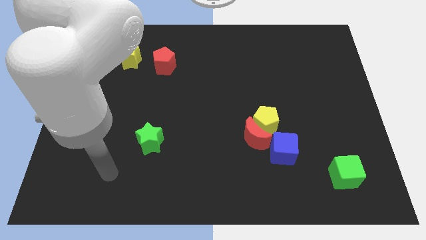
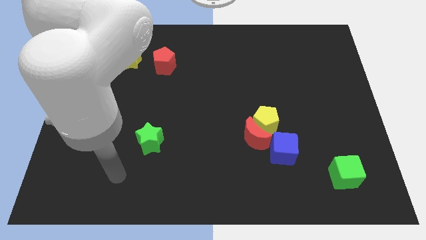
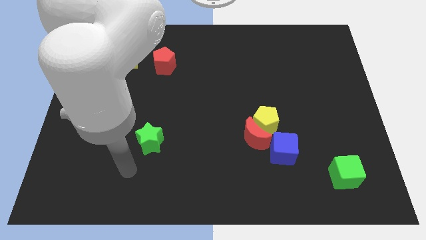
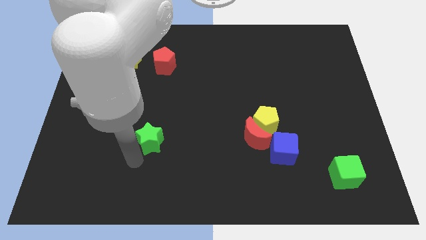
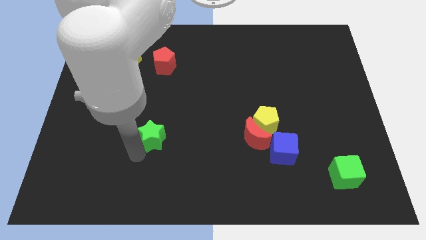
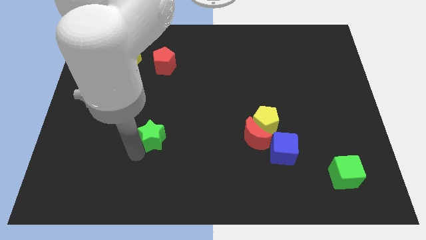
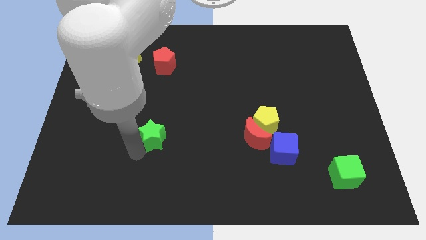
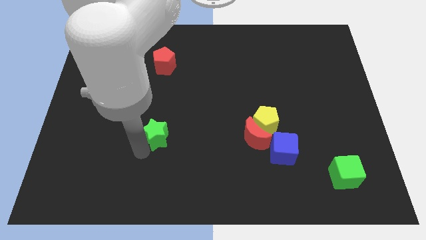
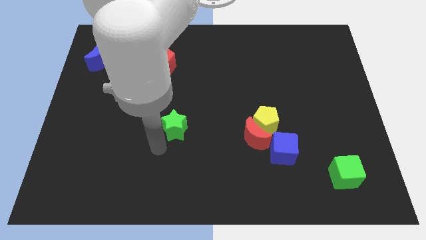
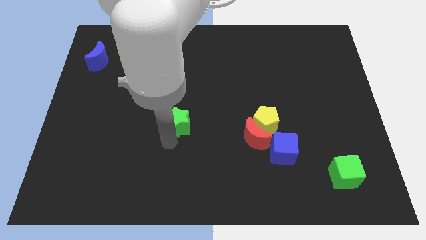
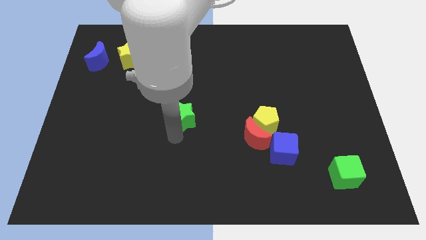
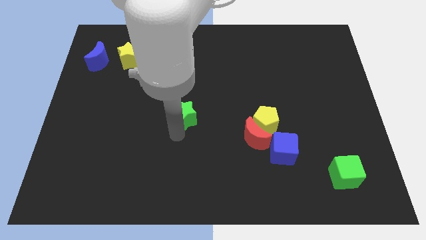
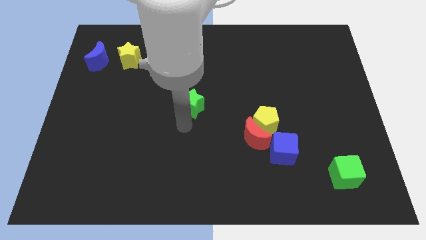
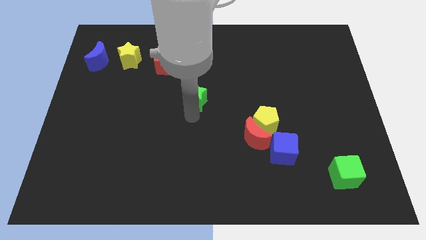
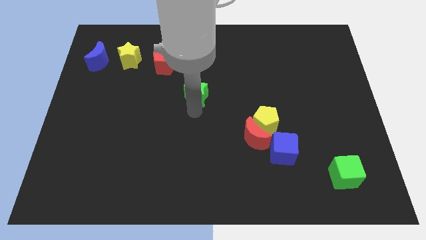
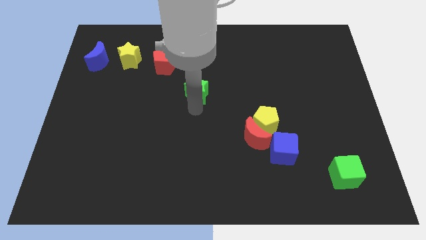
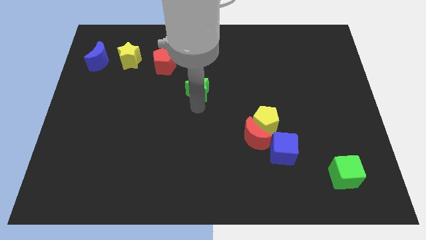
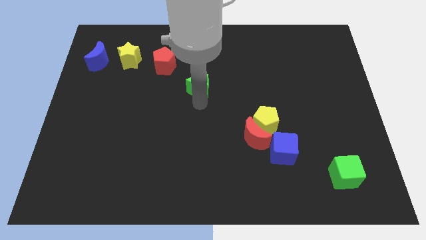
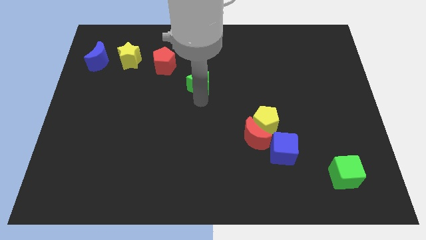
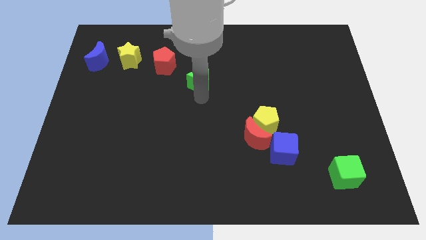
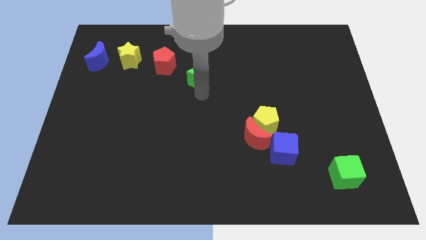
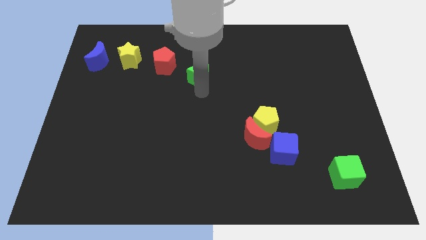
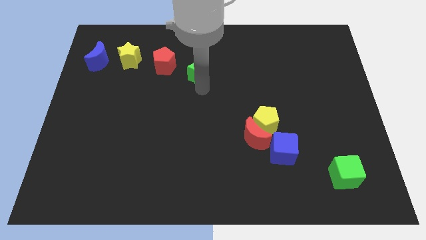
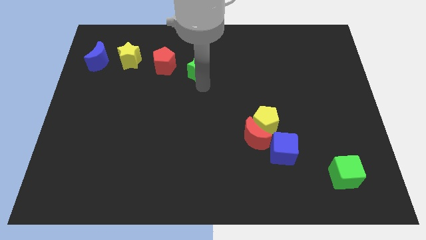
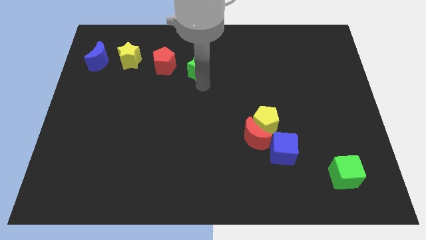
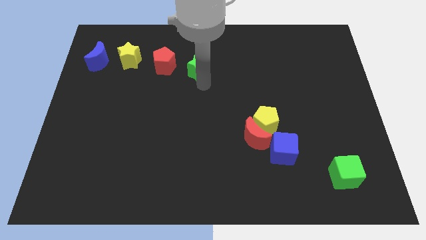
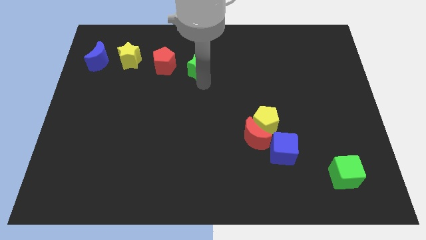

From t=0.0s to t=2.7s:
push green star diagonally upwards

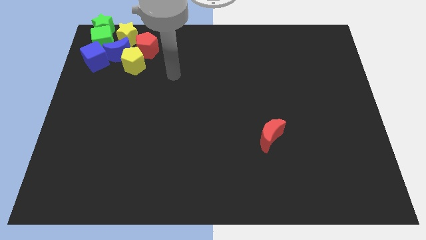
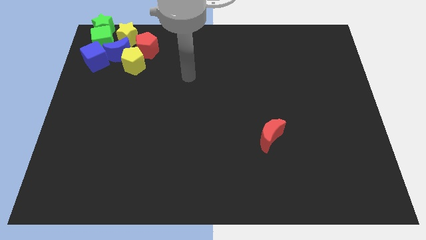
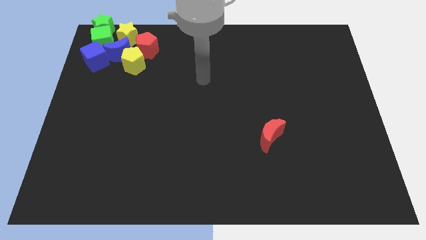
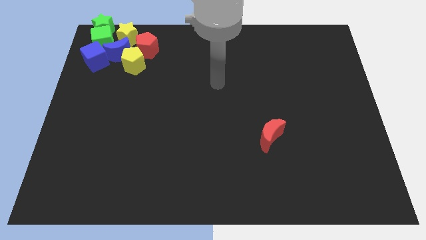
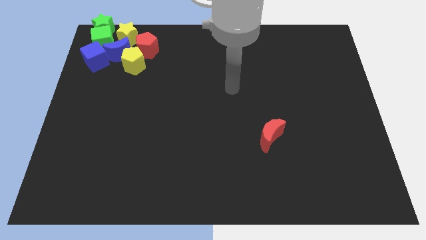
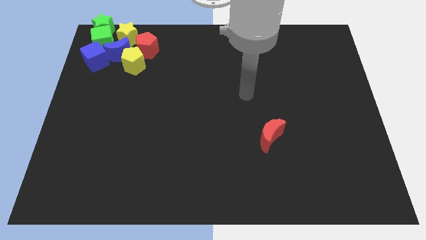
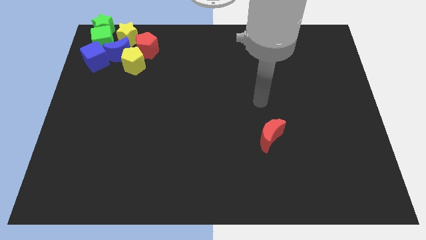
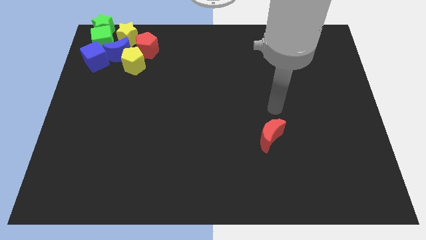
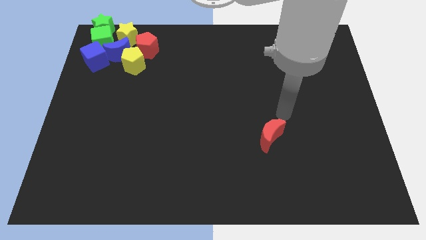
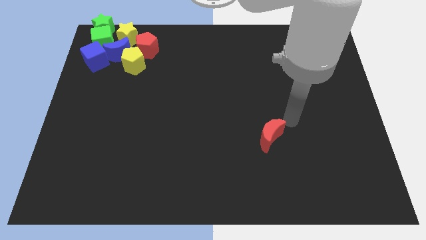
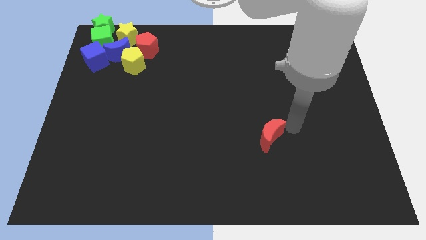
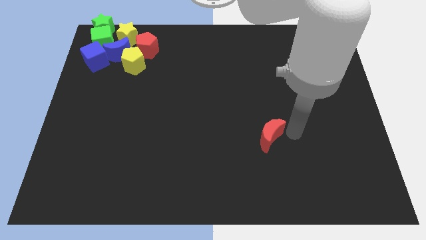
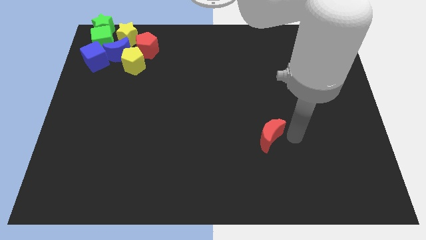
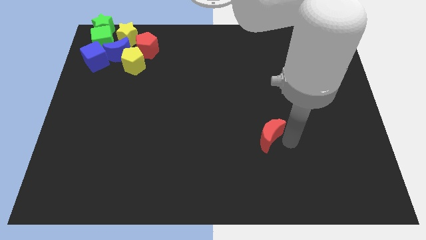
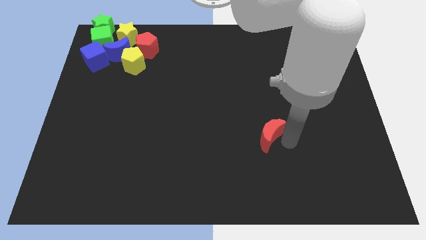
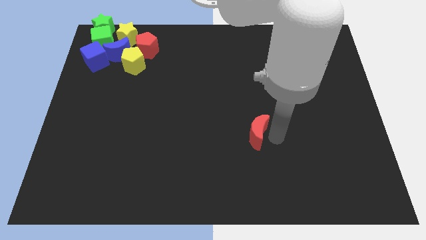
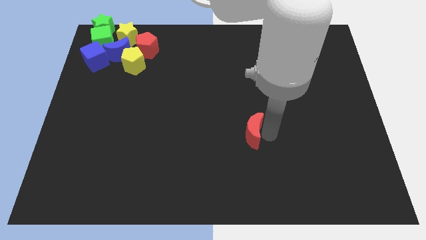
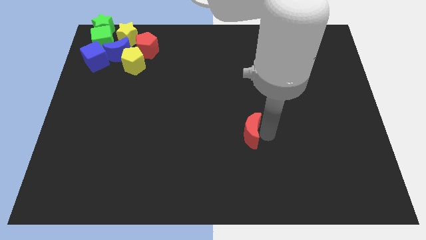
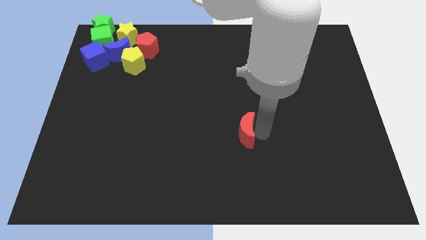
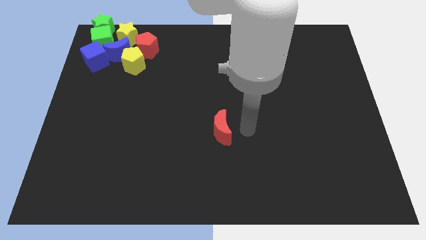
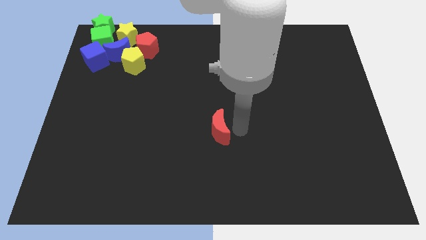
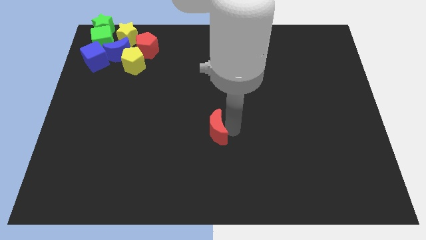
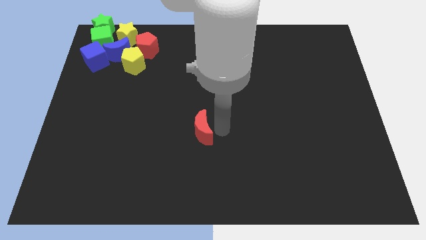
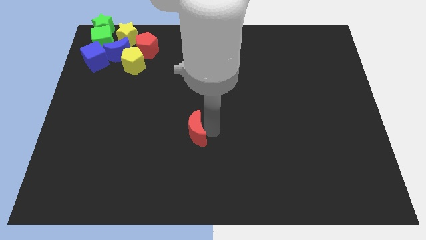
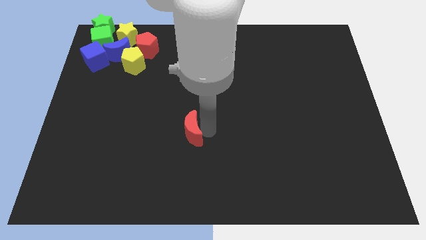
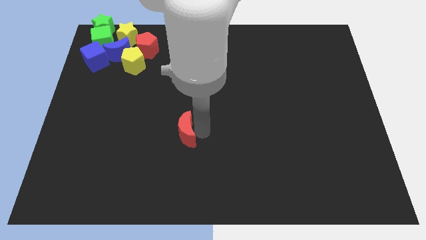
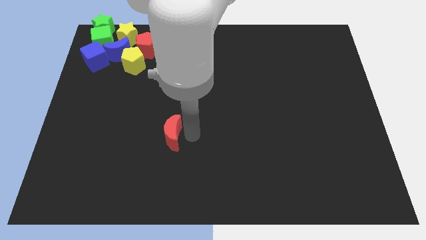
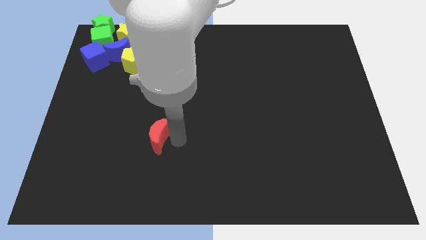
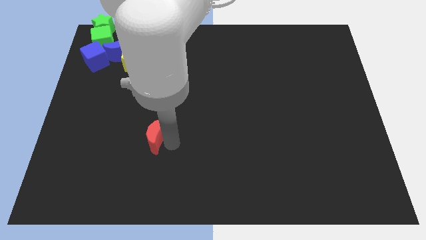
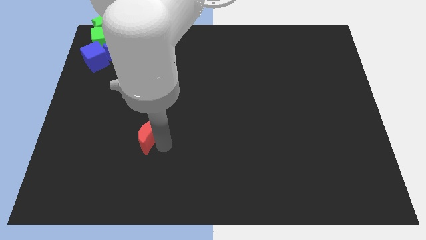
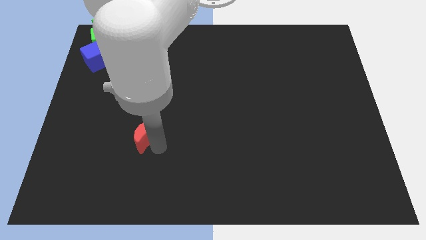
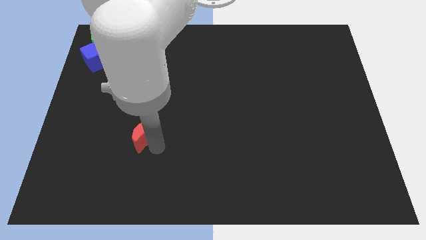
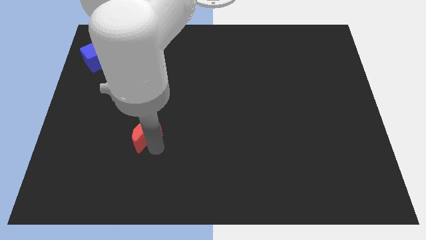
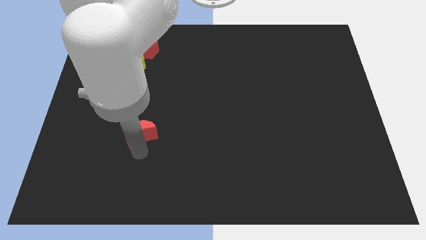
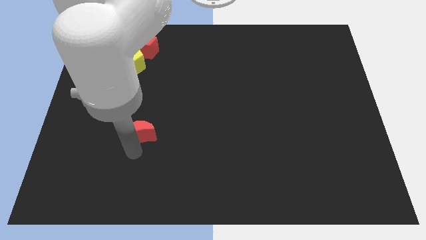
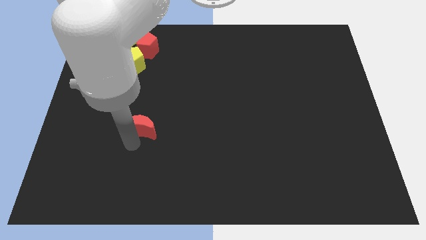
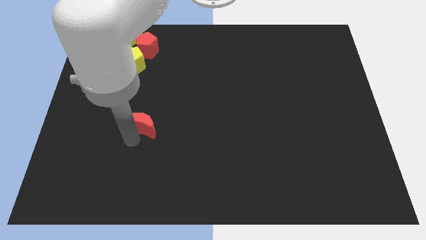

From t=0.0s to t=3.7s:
move the red moon towards the center left side of the board

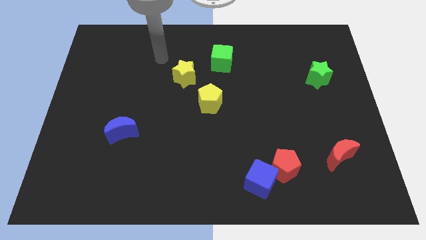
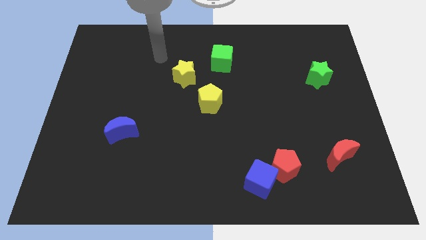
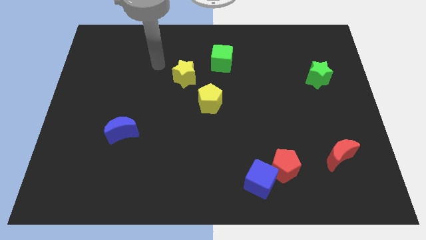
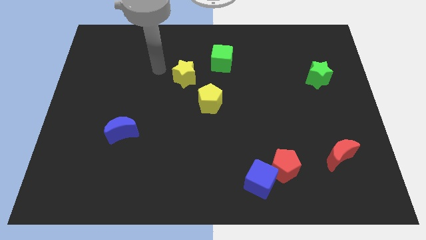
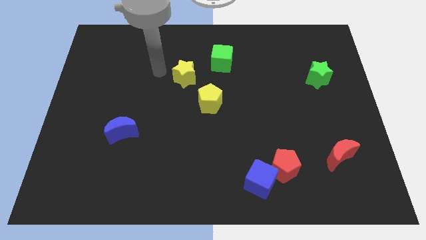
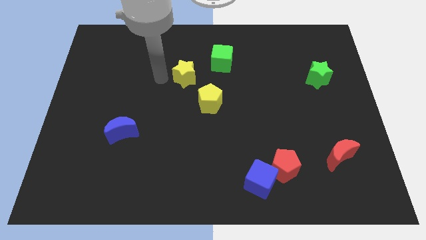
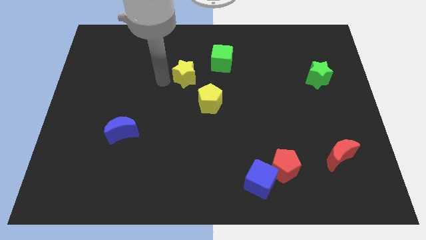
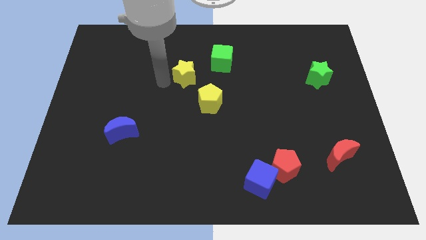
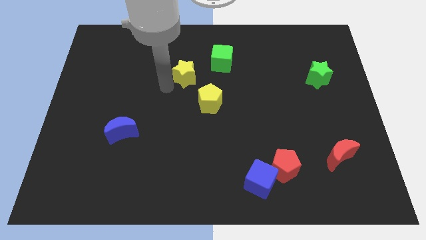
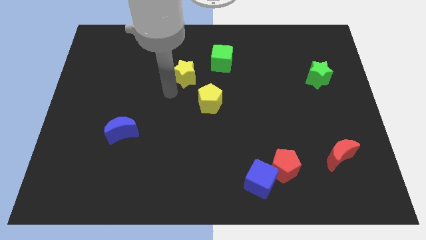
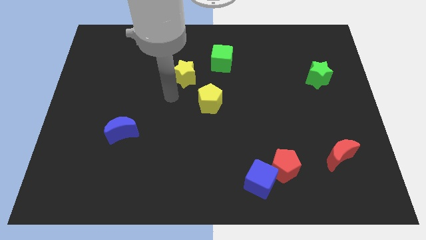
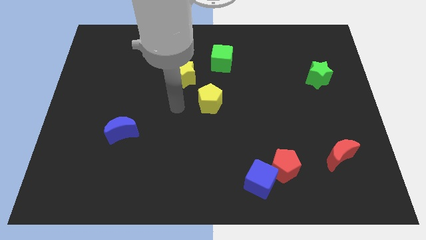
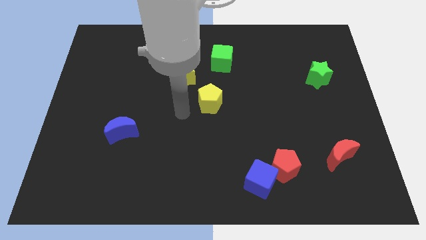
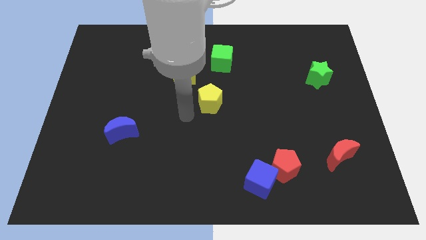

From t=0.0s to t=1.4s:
place your hand diagonally bottom left to the yellow pentagon

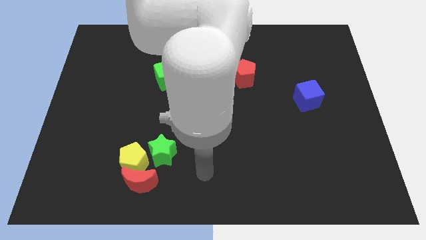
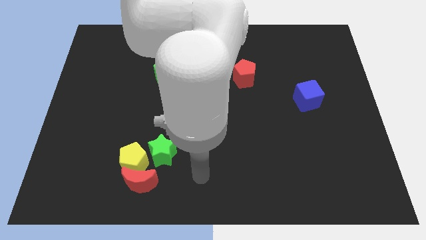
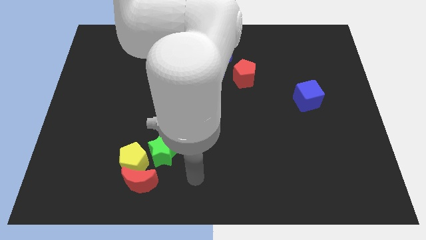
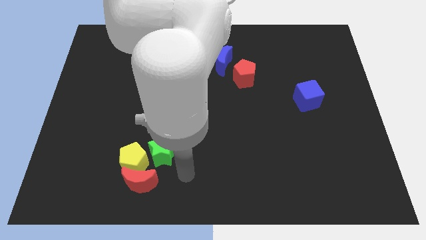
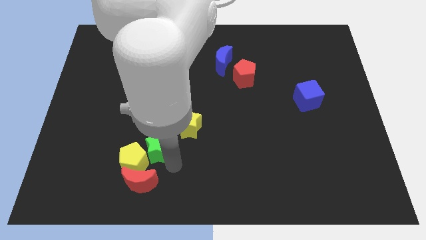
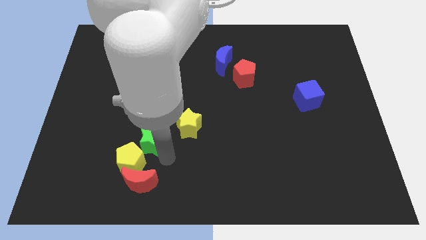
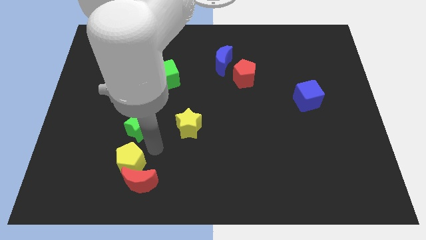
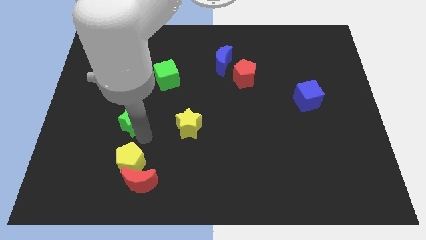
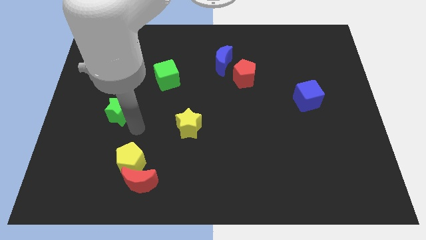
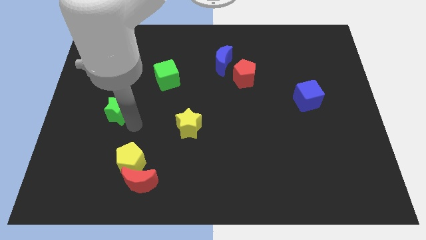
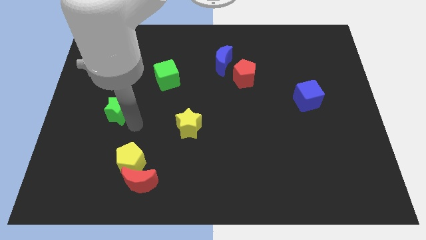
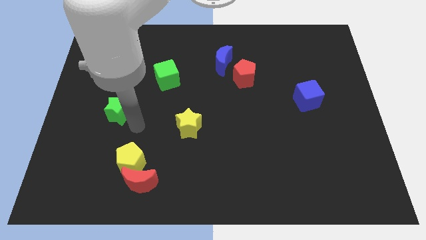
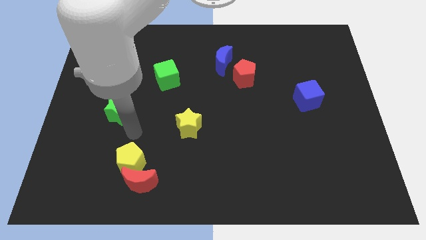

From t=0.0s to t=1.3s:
move the green star diagonally to the green cube
